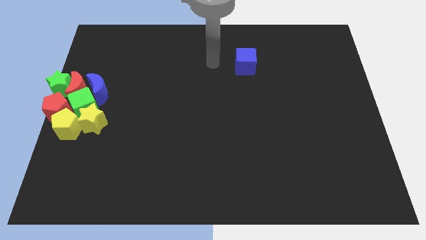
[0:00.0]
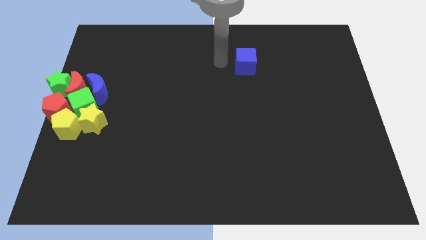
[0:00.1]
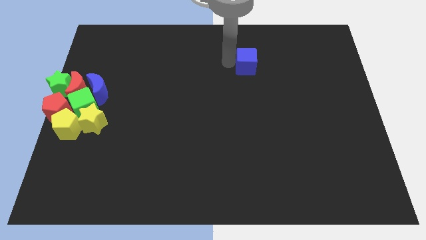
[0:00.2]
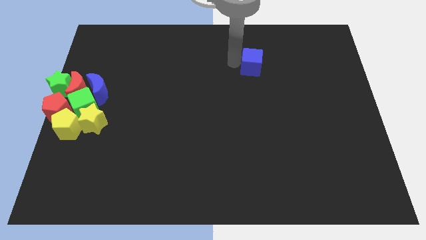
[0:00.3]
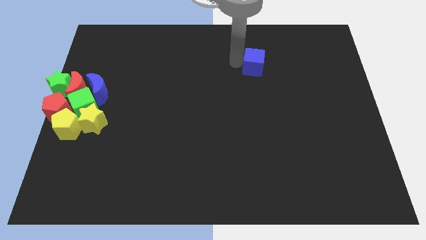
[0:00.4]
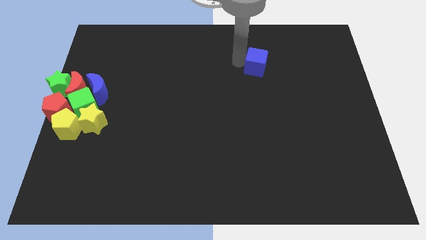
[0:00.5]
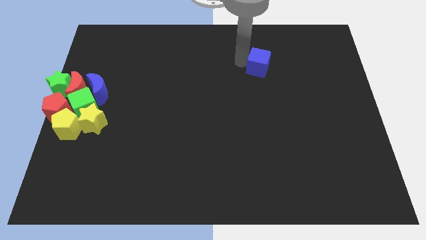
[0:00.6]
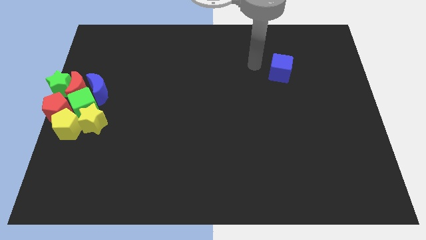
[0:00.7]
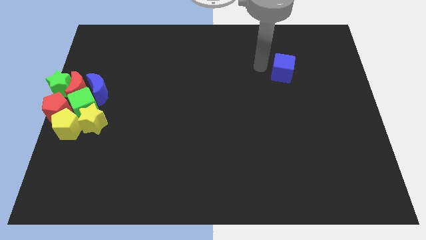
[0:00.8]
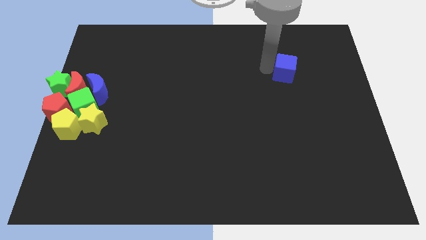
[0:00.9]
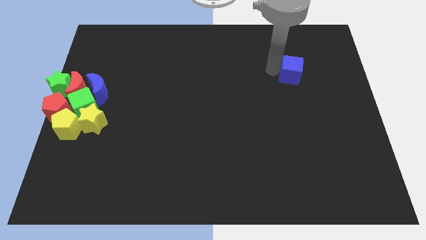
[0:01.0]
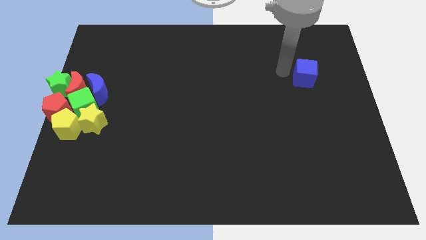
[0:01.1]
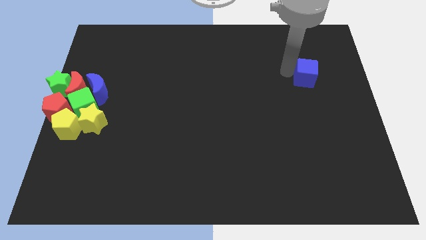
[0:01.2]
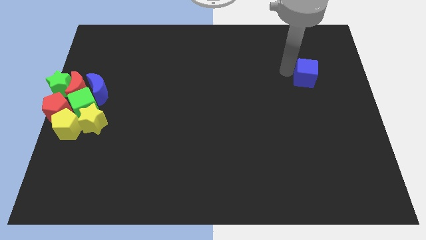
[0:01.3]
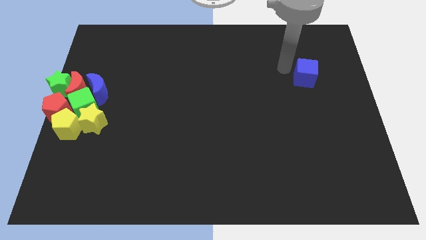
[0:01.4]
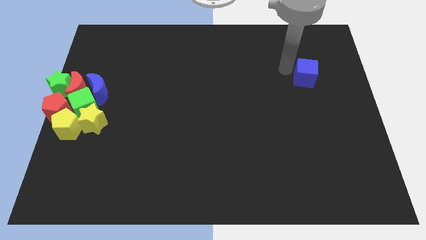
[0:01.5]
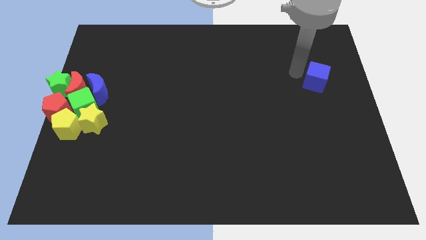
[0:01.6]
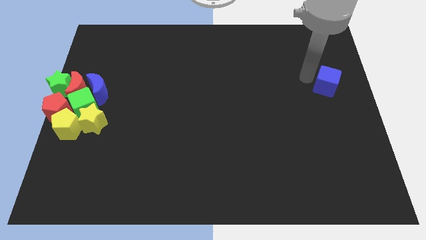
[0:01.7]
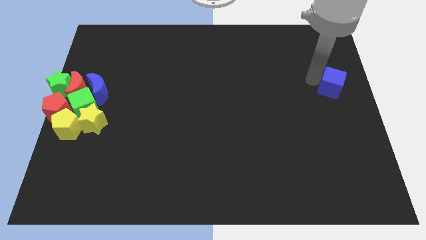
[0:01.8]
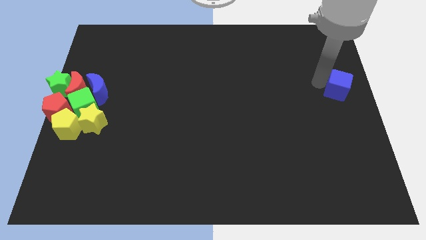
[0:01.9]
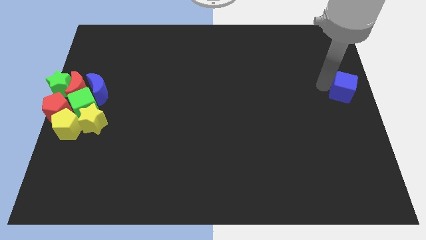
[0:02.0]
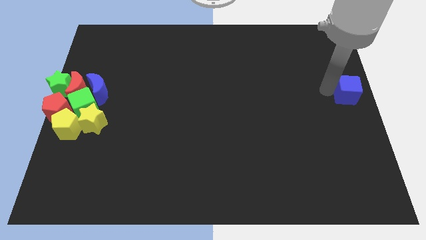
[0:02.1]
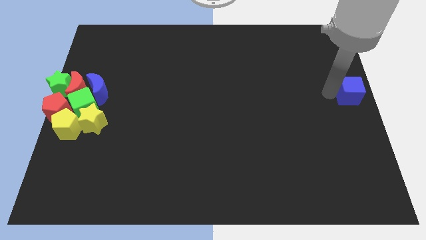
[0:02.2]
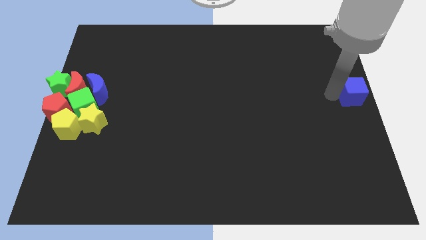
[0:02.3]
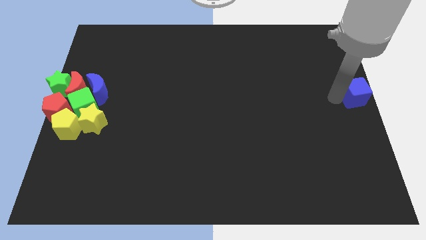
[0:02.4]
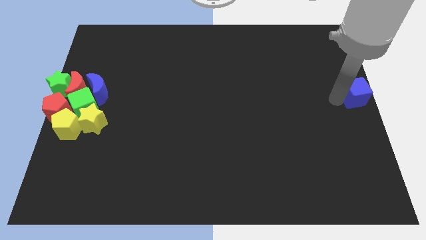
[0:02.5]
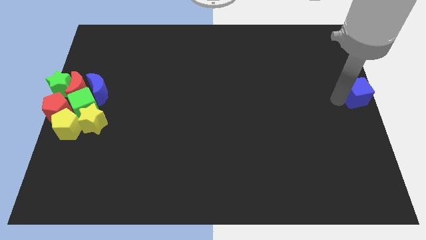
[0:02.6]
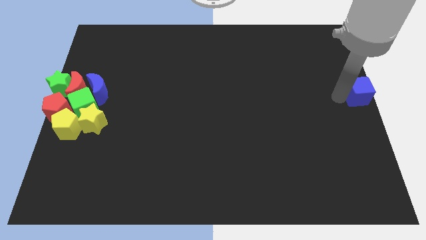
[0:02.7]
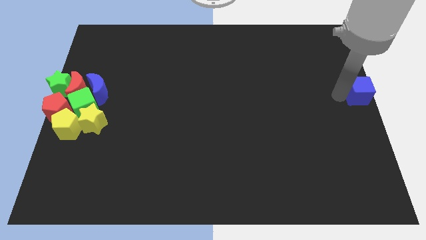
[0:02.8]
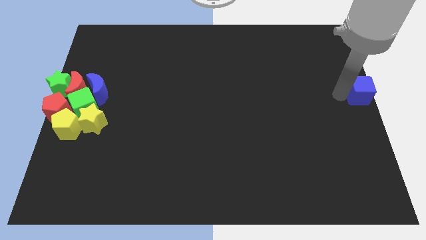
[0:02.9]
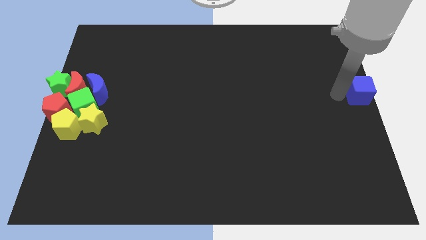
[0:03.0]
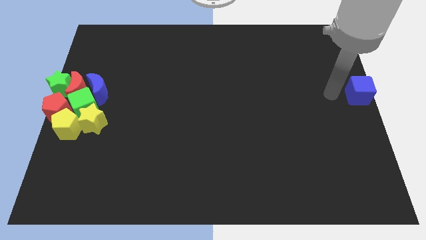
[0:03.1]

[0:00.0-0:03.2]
move the blue cube to the right center of the board

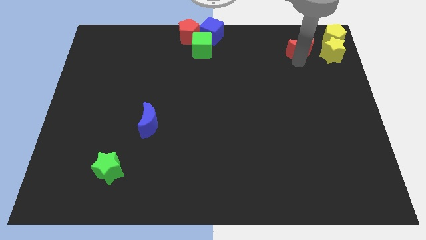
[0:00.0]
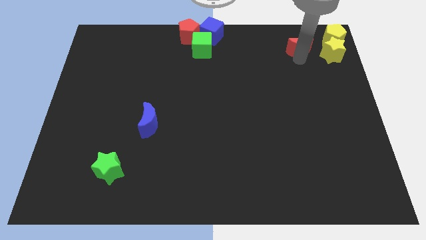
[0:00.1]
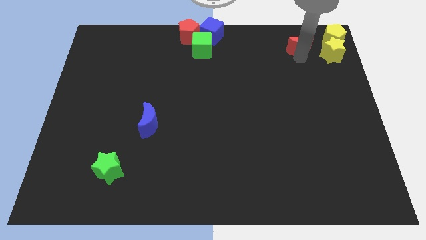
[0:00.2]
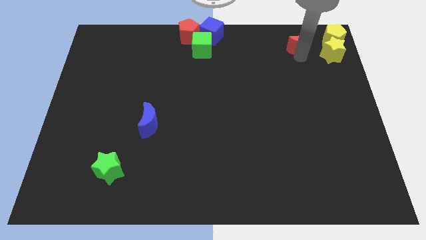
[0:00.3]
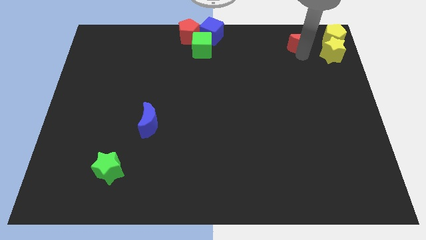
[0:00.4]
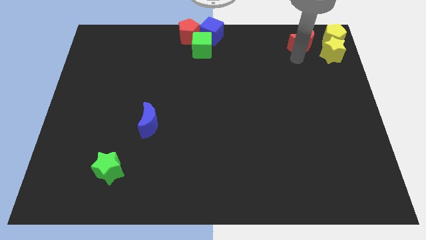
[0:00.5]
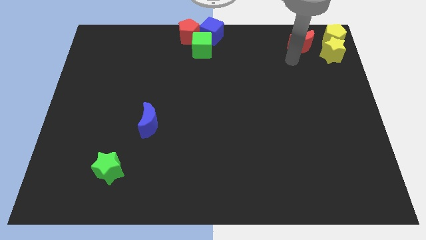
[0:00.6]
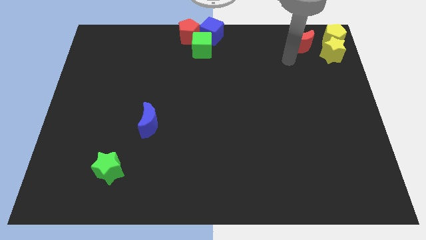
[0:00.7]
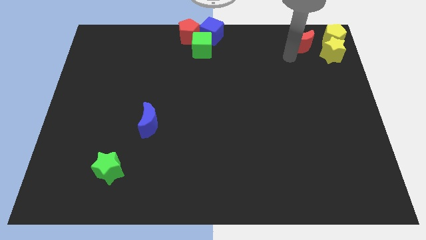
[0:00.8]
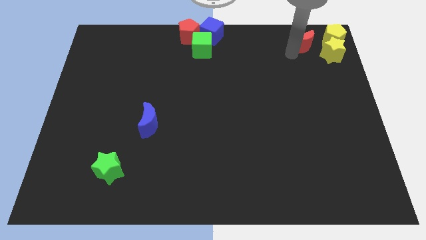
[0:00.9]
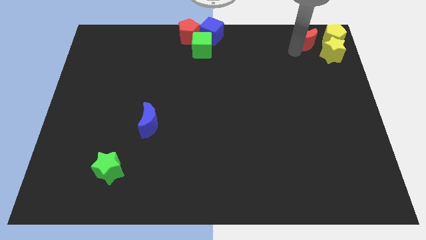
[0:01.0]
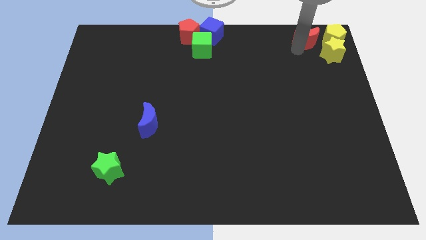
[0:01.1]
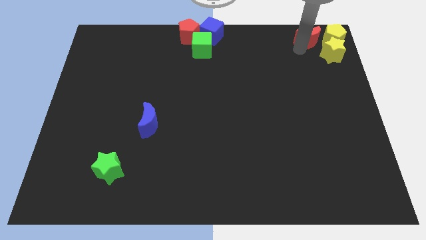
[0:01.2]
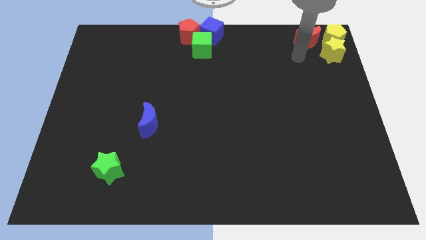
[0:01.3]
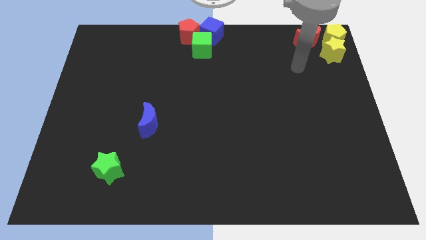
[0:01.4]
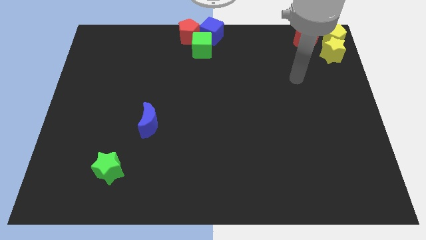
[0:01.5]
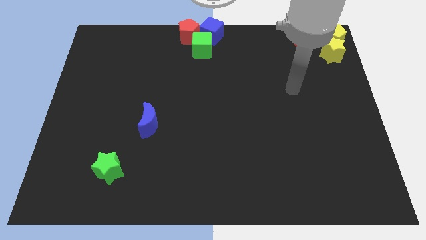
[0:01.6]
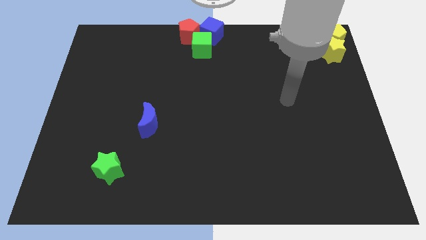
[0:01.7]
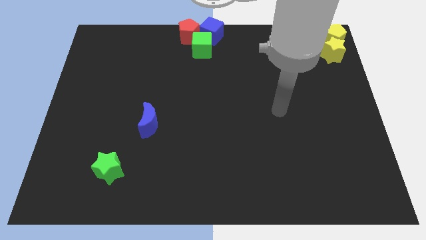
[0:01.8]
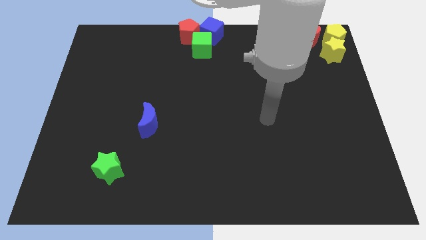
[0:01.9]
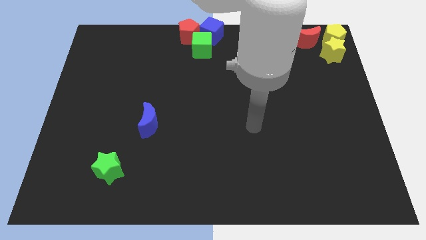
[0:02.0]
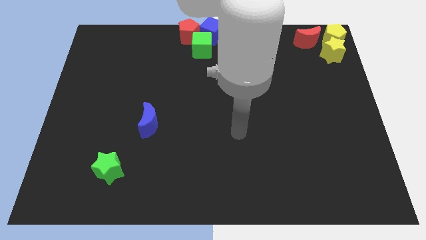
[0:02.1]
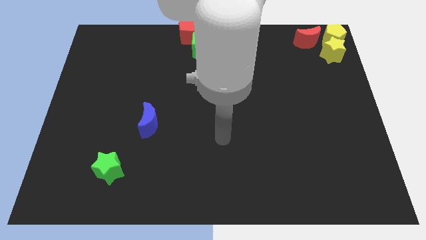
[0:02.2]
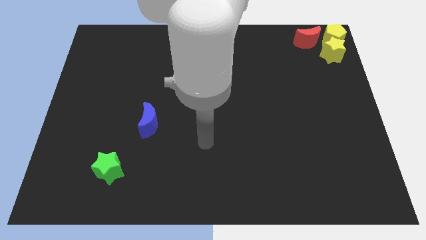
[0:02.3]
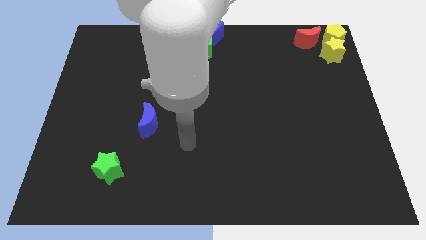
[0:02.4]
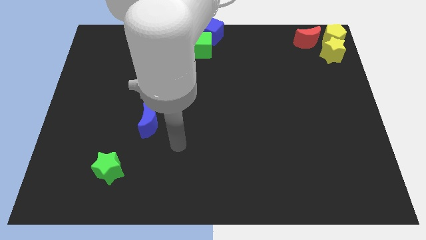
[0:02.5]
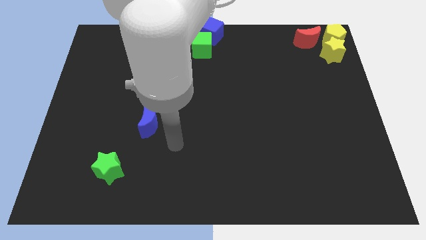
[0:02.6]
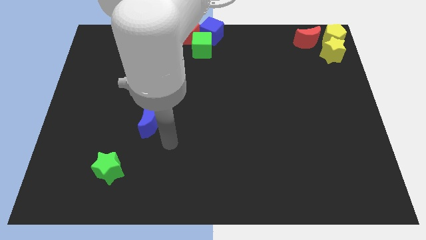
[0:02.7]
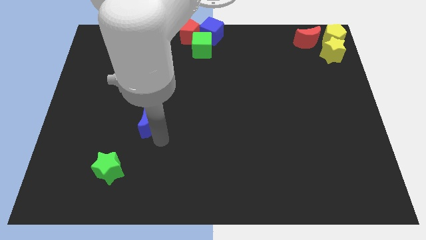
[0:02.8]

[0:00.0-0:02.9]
move the red moon to the top right

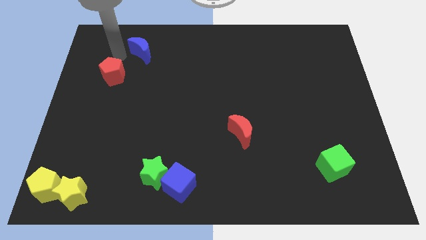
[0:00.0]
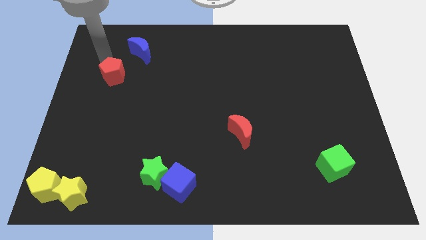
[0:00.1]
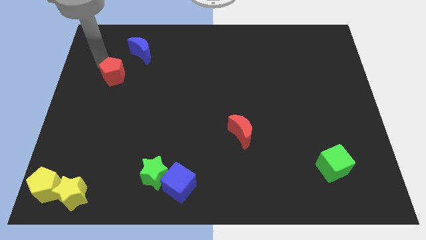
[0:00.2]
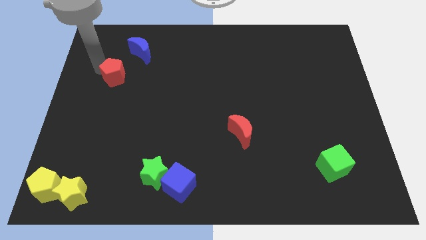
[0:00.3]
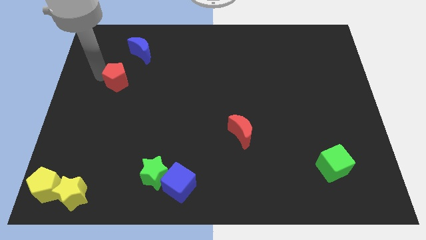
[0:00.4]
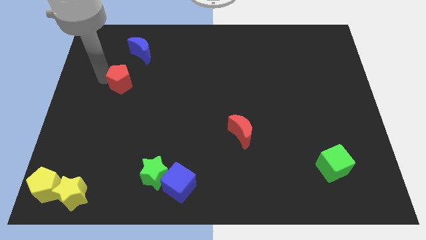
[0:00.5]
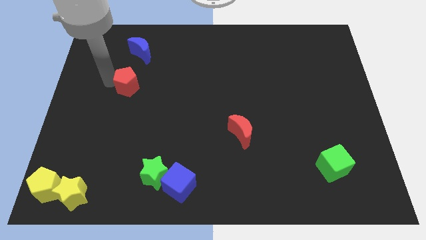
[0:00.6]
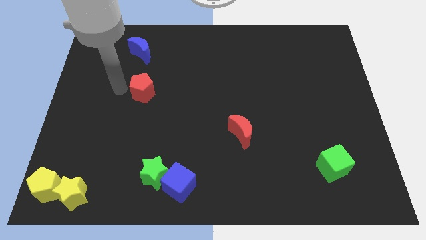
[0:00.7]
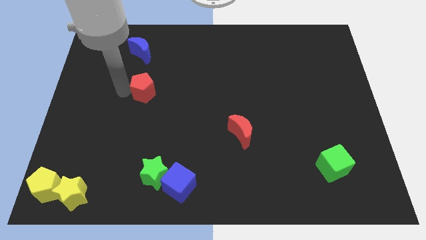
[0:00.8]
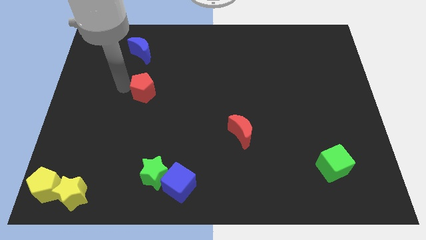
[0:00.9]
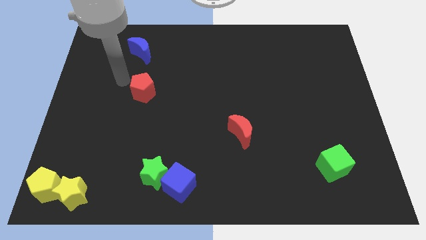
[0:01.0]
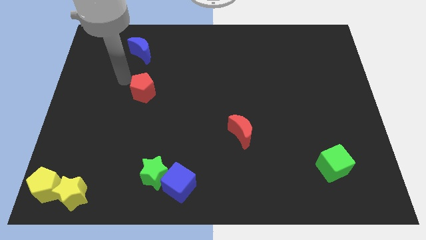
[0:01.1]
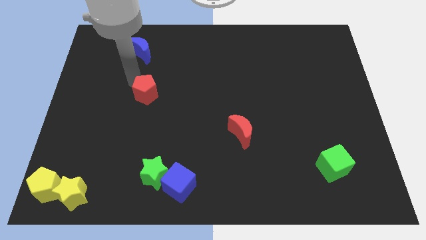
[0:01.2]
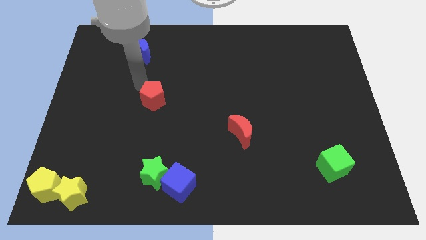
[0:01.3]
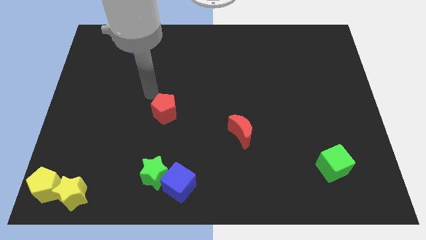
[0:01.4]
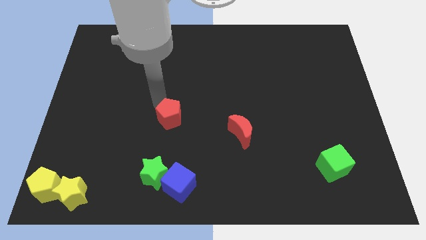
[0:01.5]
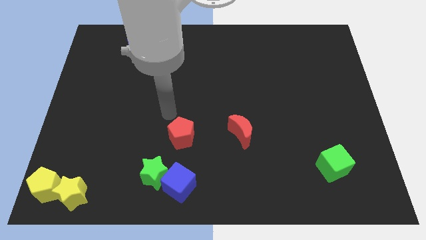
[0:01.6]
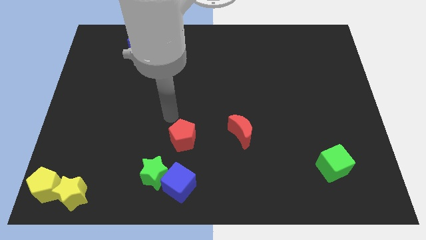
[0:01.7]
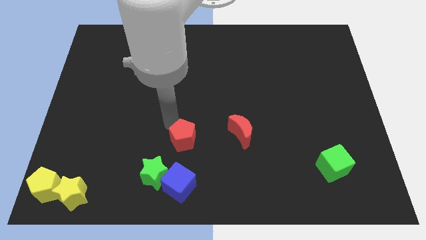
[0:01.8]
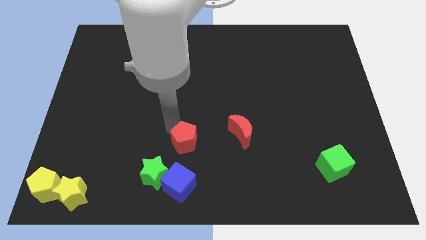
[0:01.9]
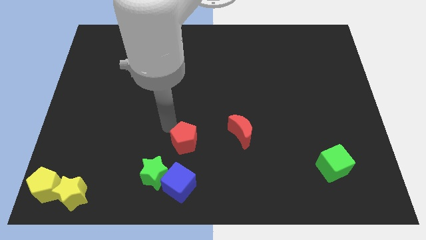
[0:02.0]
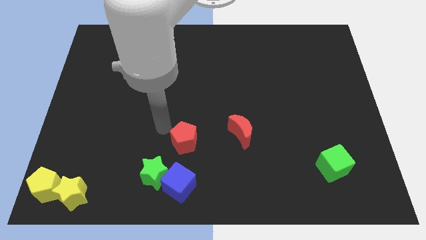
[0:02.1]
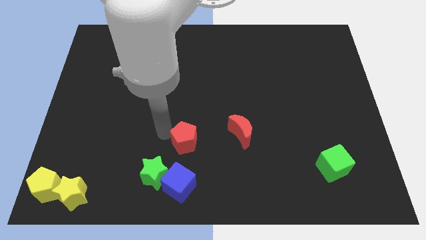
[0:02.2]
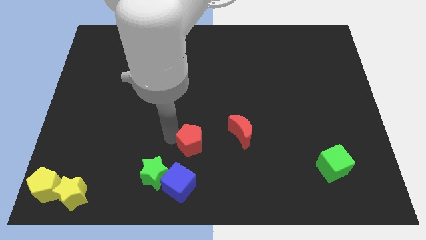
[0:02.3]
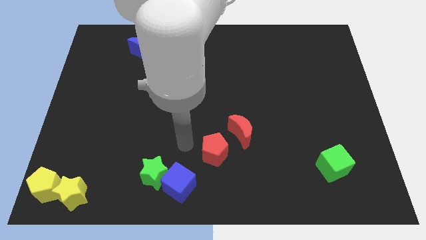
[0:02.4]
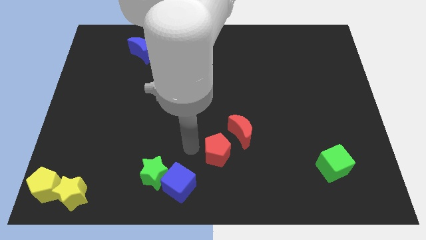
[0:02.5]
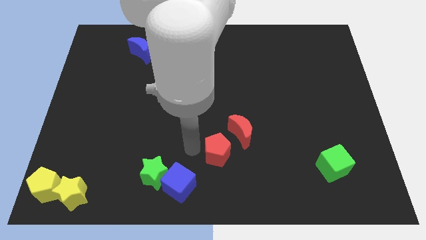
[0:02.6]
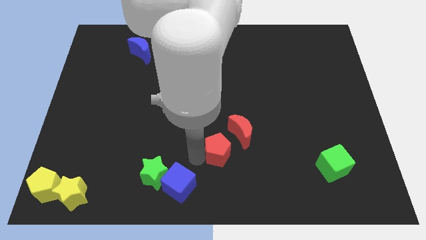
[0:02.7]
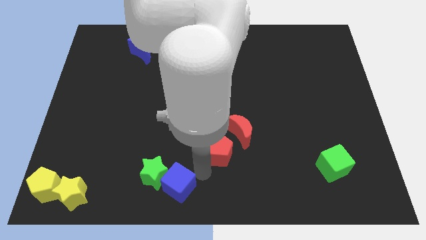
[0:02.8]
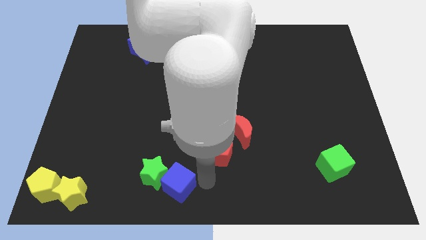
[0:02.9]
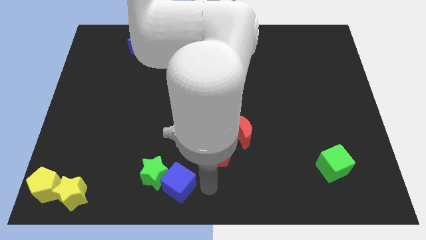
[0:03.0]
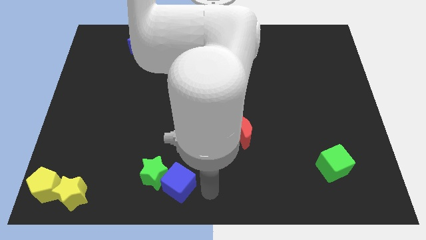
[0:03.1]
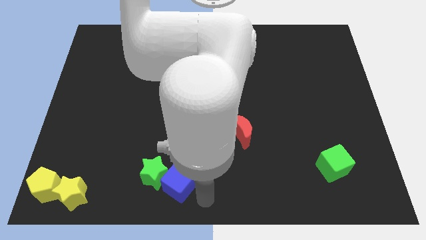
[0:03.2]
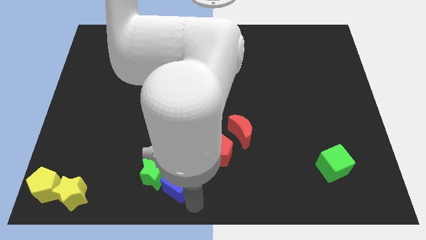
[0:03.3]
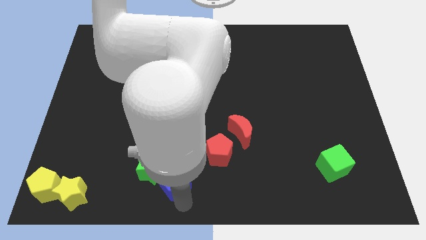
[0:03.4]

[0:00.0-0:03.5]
place red pentagon to the left of red moon
